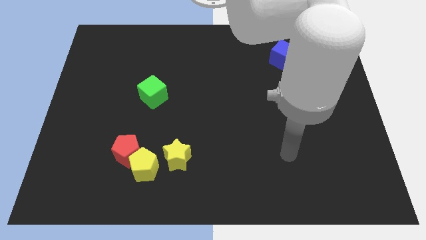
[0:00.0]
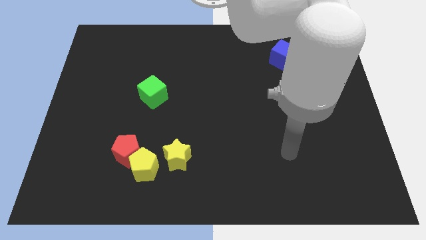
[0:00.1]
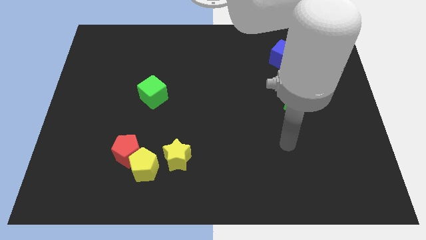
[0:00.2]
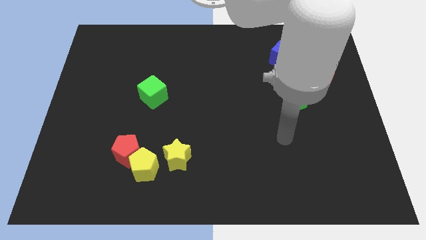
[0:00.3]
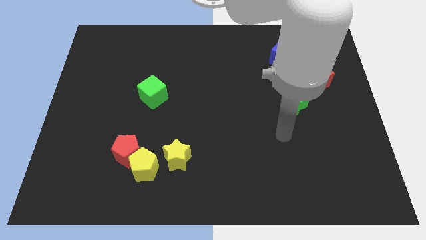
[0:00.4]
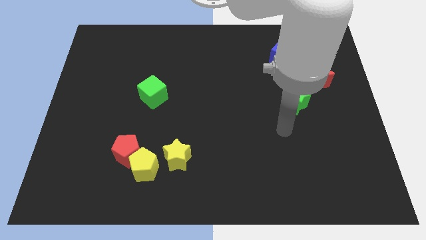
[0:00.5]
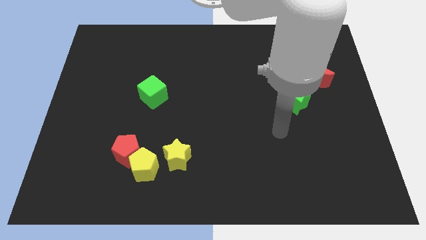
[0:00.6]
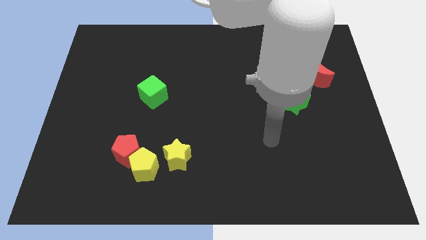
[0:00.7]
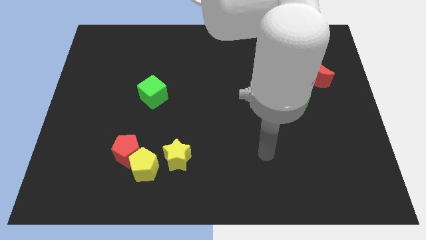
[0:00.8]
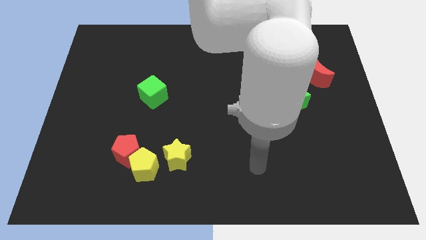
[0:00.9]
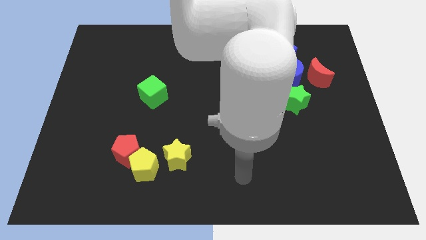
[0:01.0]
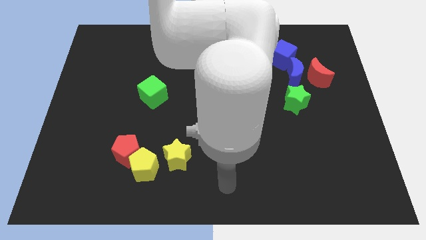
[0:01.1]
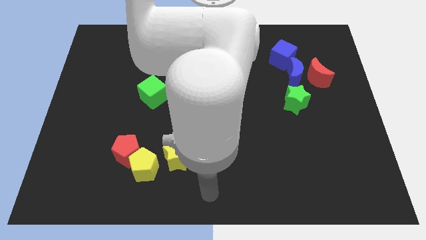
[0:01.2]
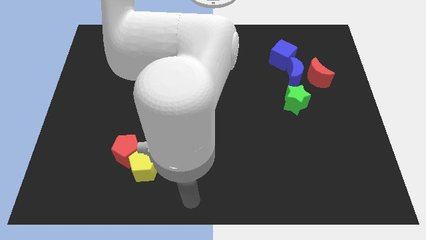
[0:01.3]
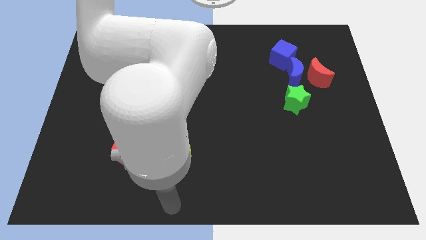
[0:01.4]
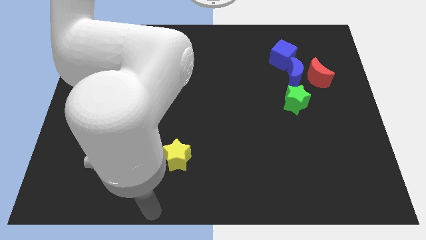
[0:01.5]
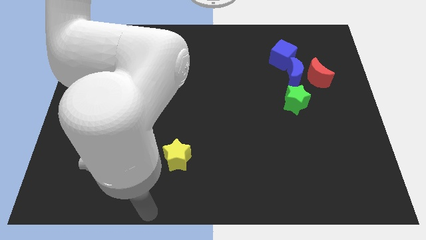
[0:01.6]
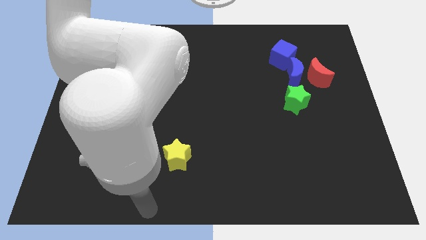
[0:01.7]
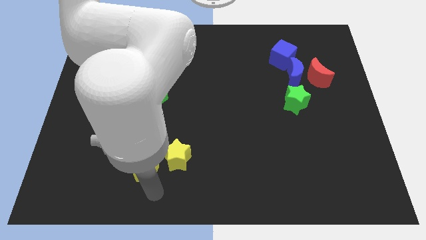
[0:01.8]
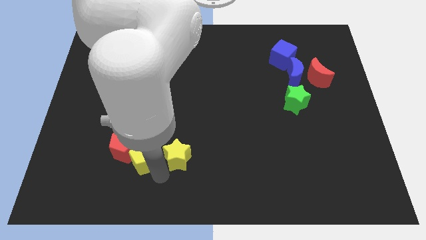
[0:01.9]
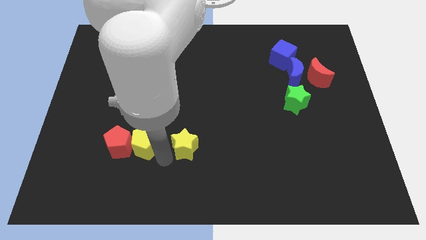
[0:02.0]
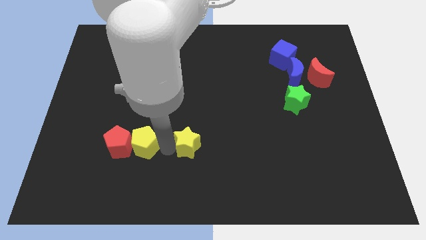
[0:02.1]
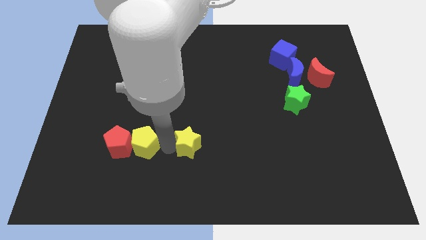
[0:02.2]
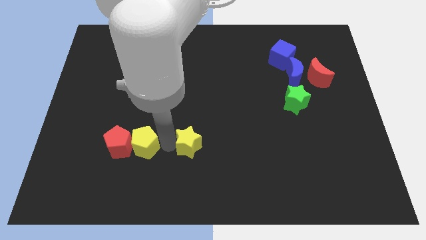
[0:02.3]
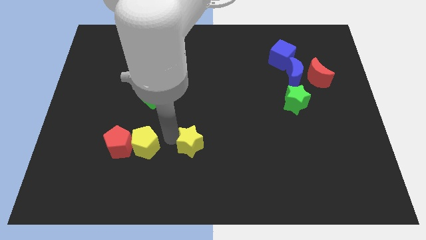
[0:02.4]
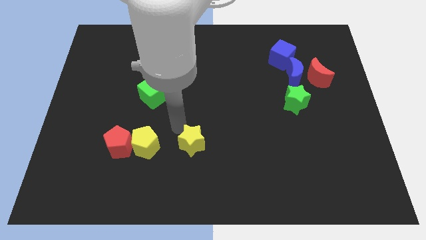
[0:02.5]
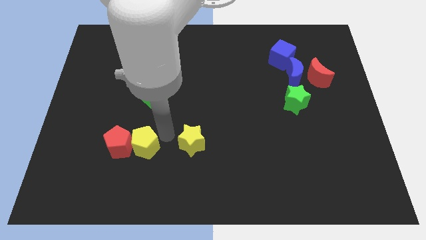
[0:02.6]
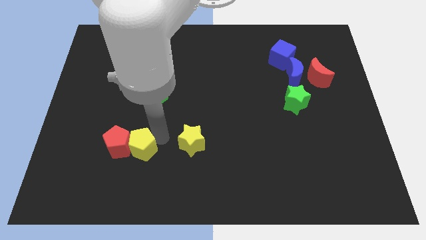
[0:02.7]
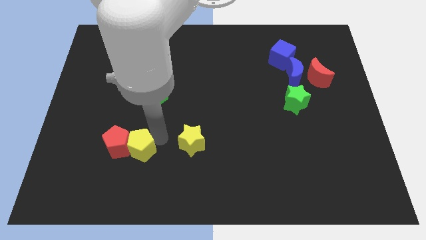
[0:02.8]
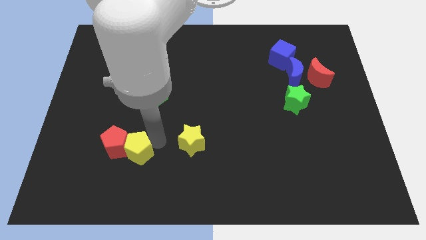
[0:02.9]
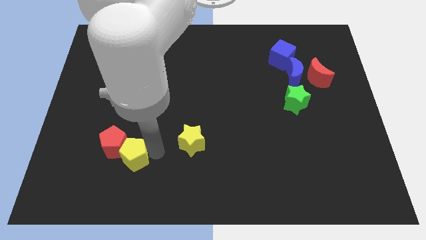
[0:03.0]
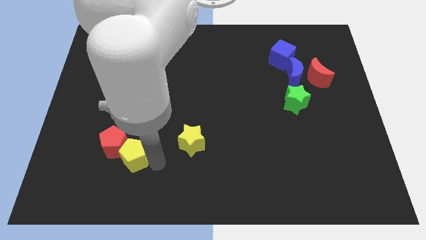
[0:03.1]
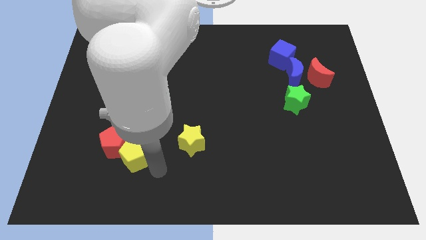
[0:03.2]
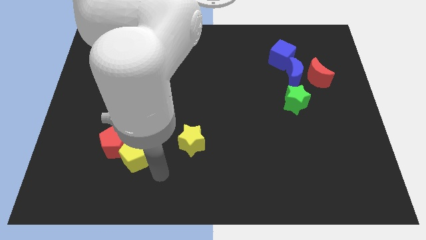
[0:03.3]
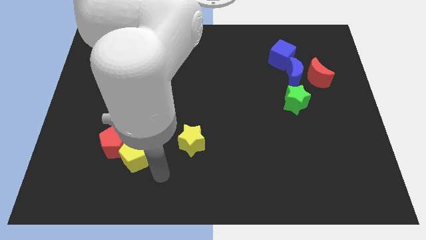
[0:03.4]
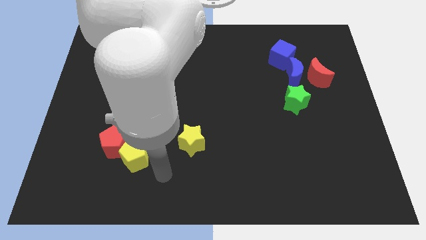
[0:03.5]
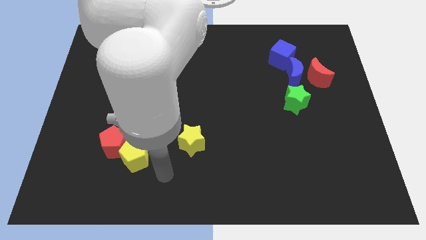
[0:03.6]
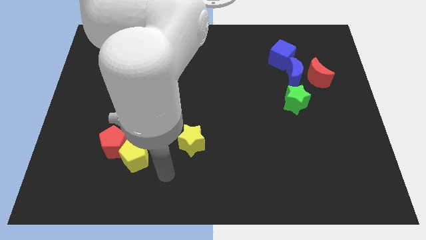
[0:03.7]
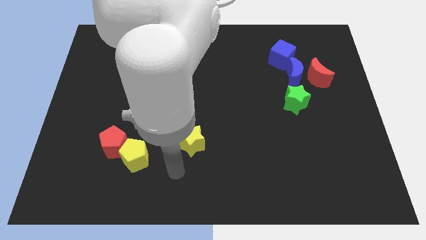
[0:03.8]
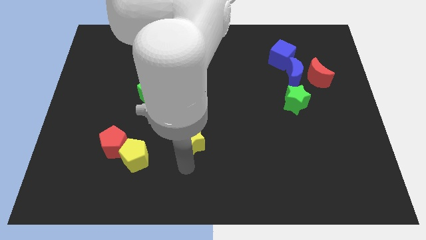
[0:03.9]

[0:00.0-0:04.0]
push yellow star upwards a bit

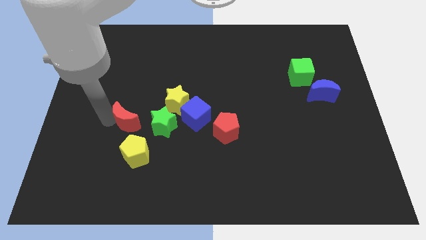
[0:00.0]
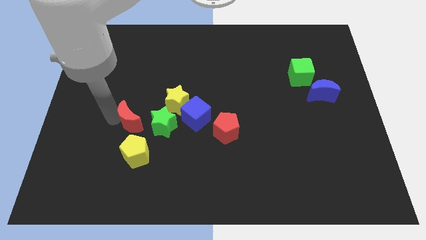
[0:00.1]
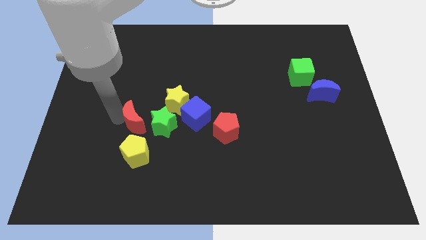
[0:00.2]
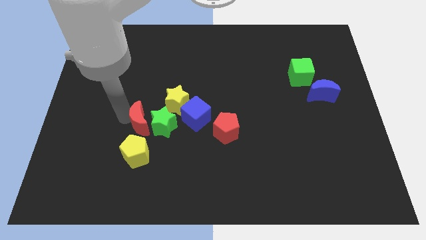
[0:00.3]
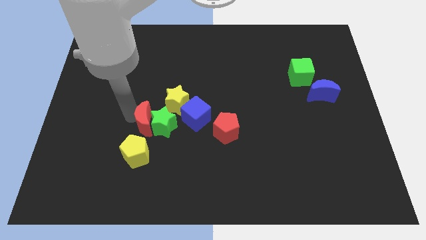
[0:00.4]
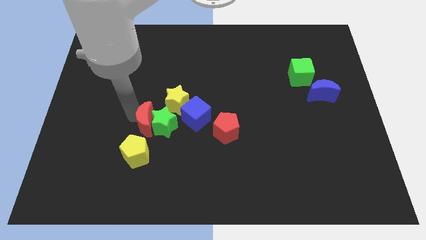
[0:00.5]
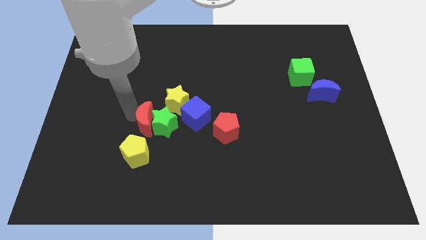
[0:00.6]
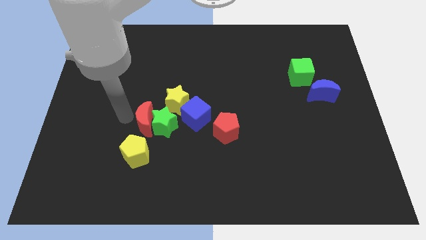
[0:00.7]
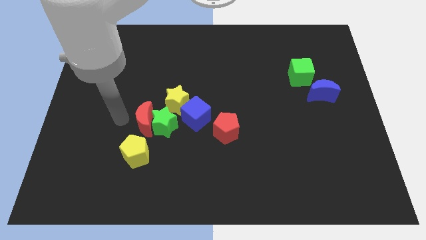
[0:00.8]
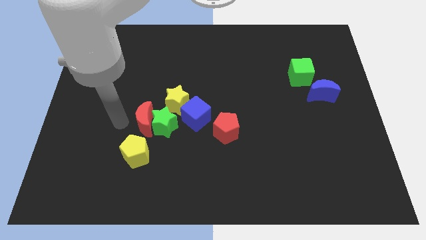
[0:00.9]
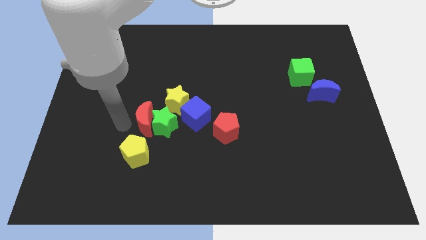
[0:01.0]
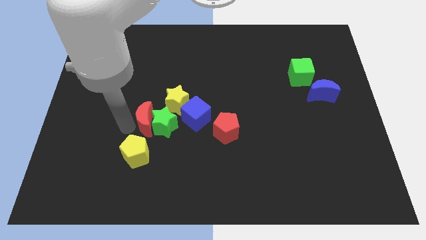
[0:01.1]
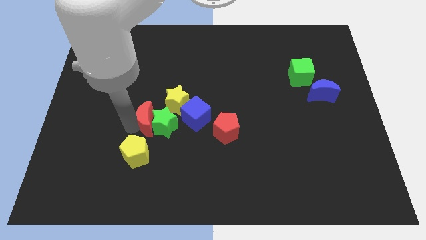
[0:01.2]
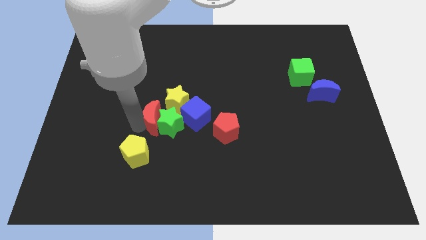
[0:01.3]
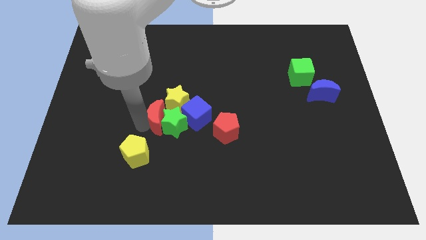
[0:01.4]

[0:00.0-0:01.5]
push the red moon close to the green star

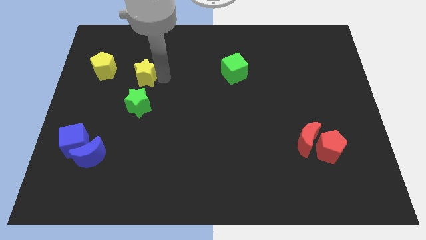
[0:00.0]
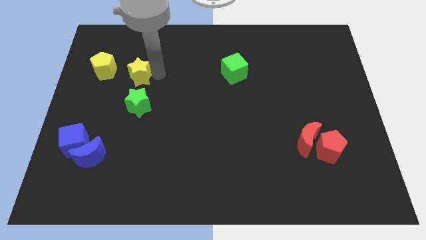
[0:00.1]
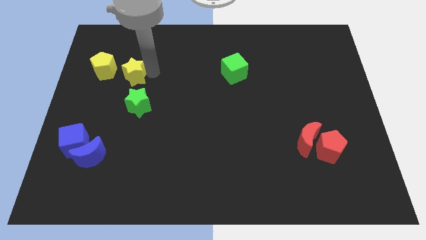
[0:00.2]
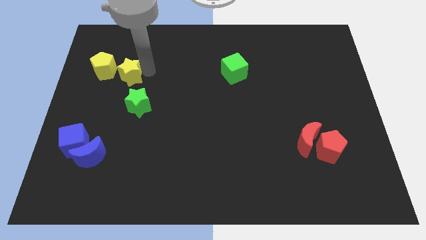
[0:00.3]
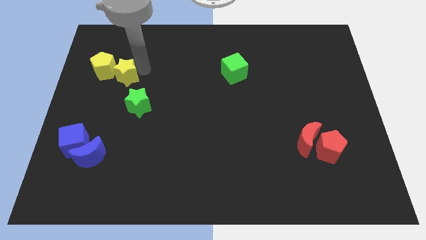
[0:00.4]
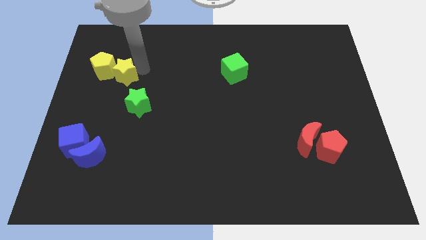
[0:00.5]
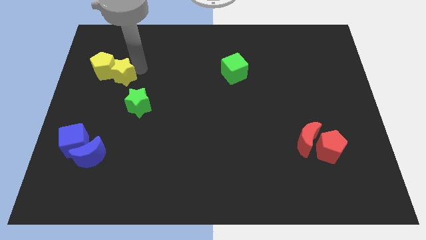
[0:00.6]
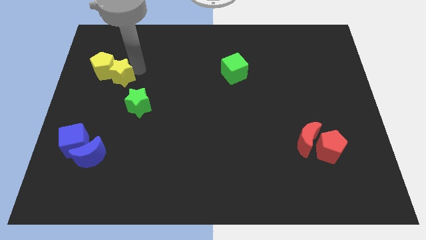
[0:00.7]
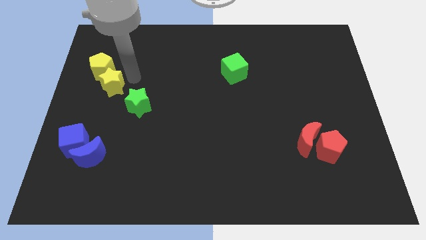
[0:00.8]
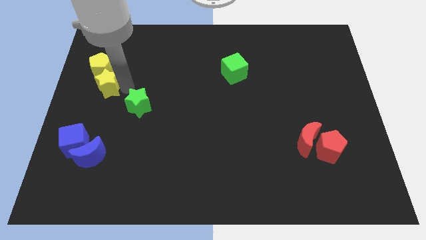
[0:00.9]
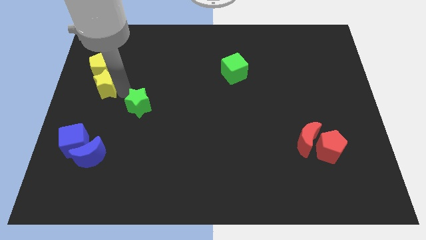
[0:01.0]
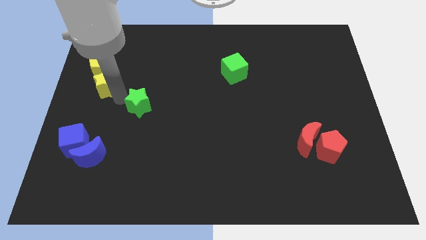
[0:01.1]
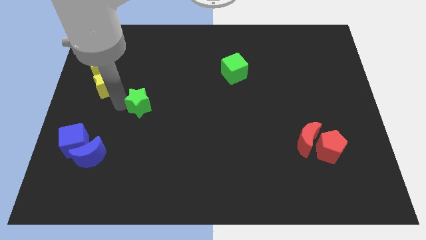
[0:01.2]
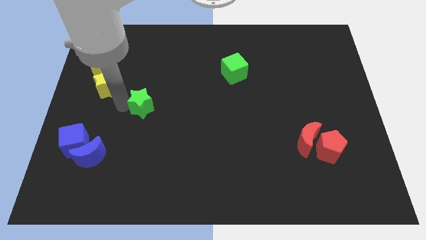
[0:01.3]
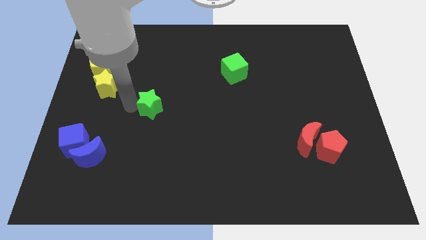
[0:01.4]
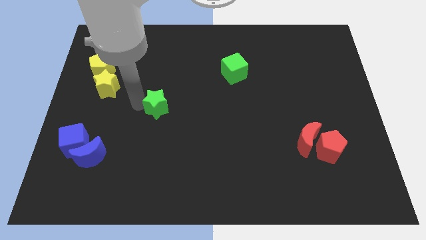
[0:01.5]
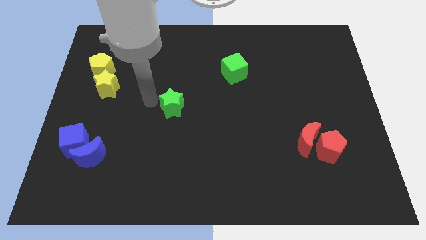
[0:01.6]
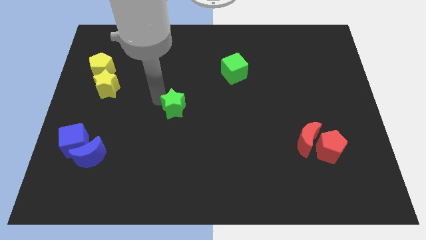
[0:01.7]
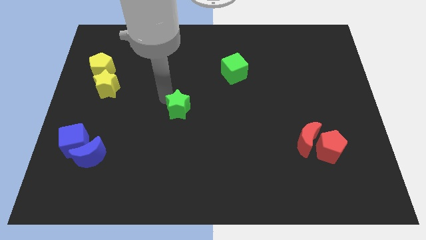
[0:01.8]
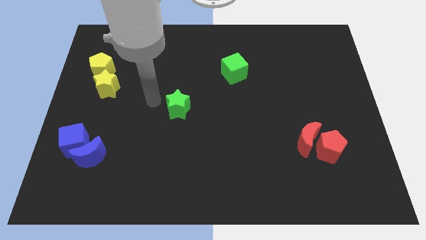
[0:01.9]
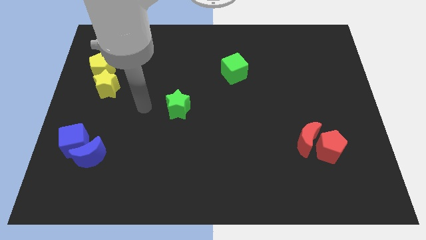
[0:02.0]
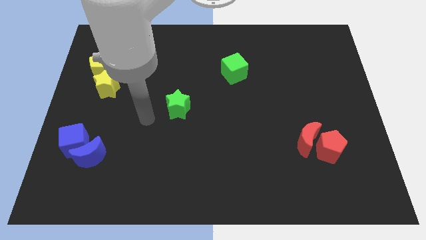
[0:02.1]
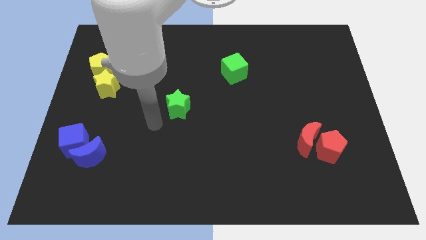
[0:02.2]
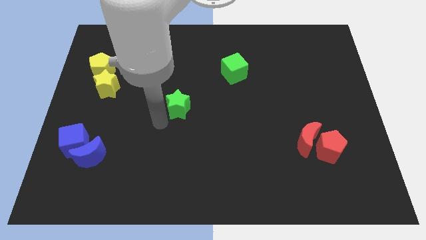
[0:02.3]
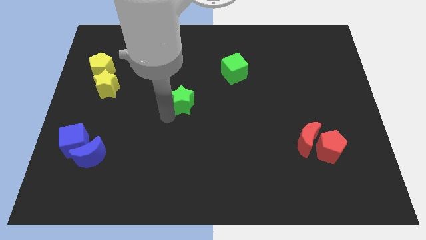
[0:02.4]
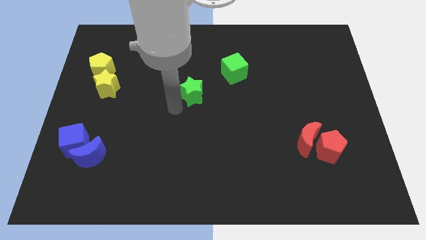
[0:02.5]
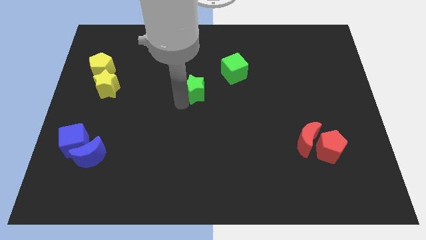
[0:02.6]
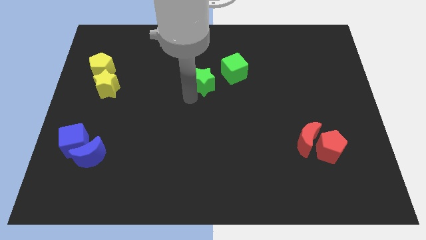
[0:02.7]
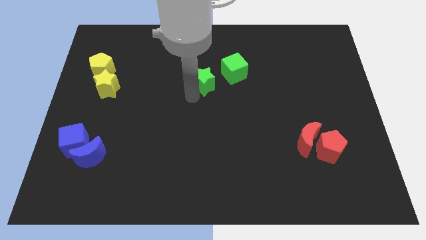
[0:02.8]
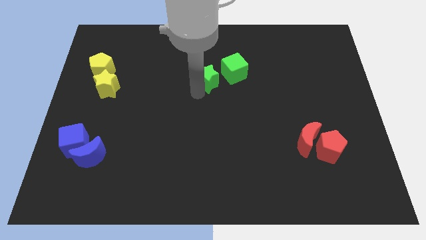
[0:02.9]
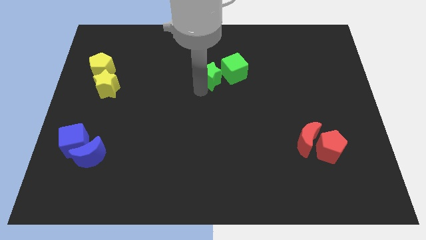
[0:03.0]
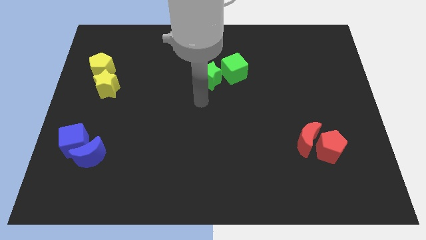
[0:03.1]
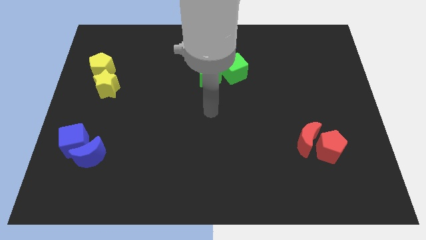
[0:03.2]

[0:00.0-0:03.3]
place the green star to the left of the green cube

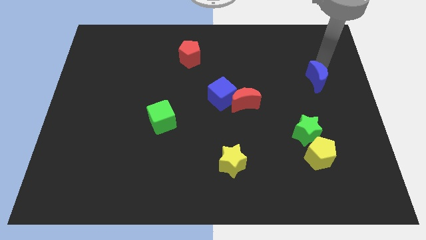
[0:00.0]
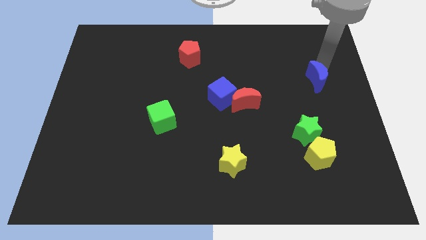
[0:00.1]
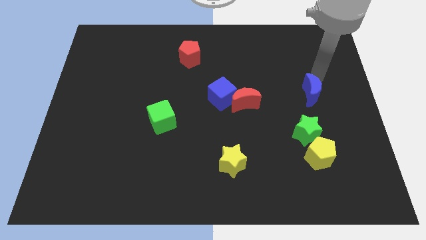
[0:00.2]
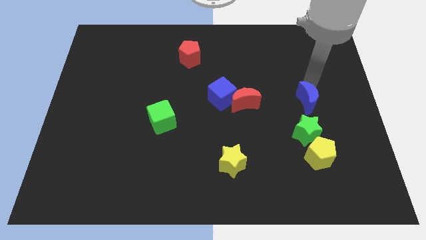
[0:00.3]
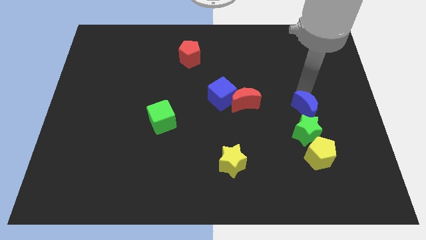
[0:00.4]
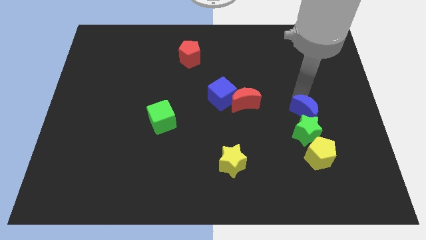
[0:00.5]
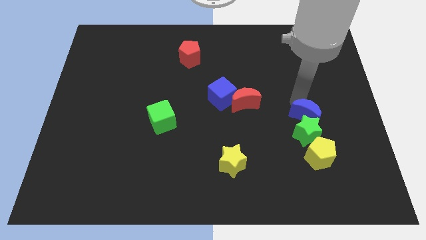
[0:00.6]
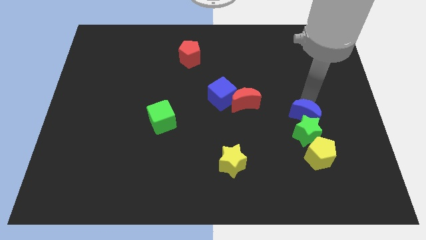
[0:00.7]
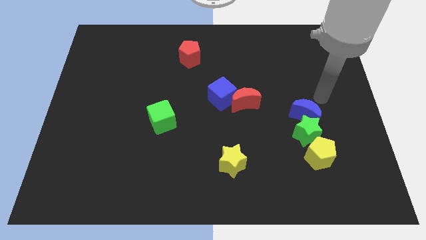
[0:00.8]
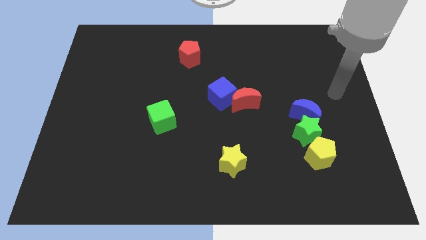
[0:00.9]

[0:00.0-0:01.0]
push blue crescent into green star
